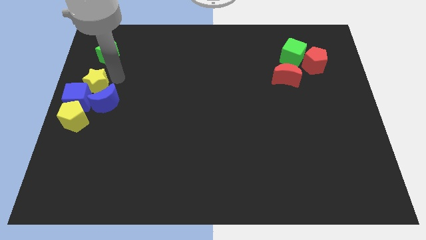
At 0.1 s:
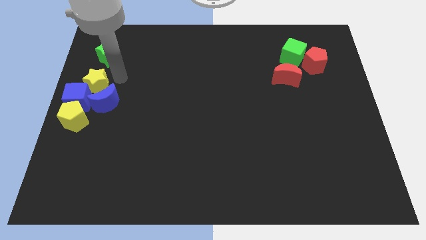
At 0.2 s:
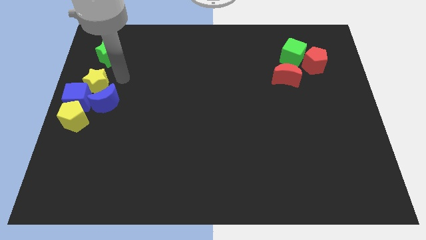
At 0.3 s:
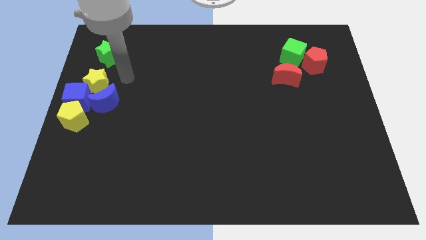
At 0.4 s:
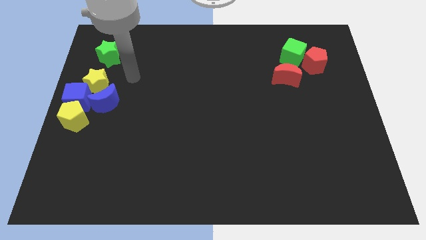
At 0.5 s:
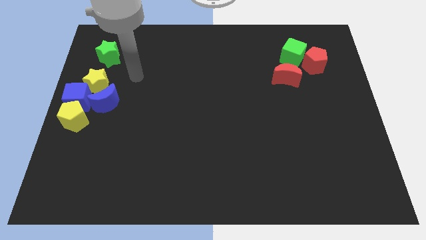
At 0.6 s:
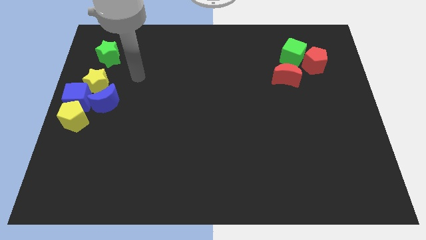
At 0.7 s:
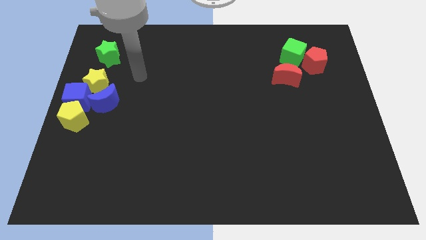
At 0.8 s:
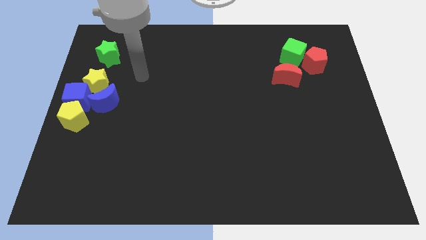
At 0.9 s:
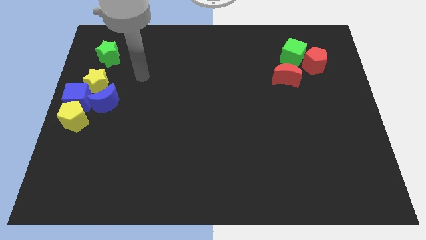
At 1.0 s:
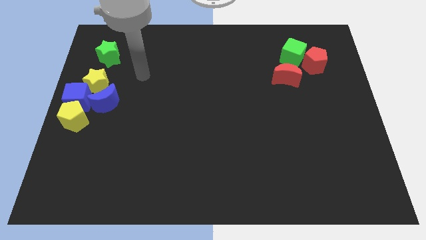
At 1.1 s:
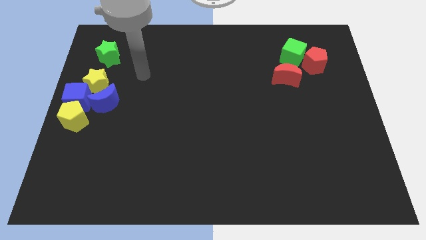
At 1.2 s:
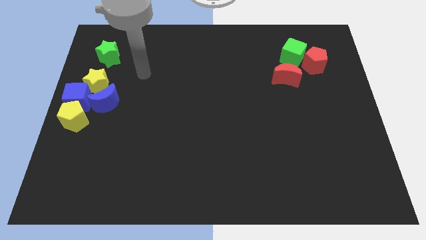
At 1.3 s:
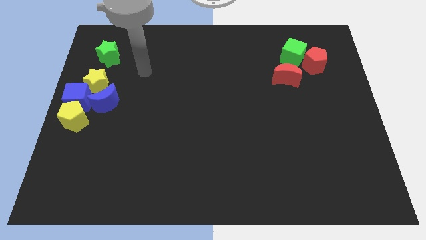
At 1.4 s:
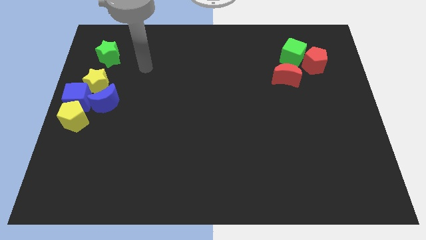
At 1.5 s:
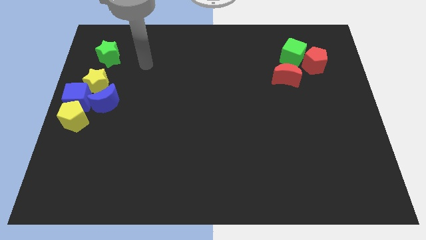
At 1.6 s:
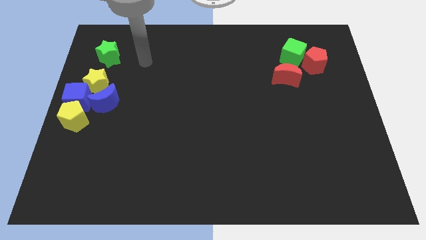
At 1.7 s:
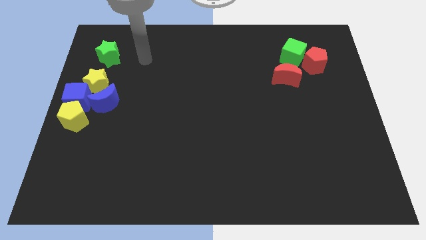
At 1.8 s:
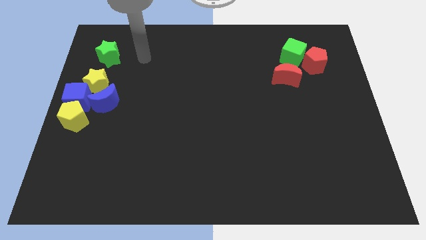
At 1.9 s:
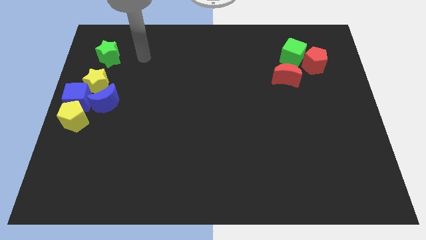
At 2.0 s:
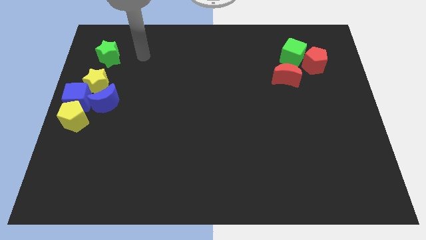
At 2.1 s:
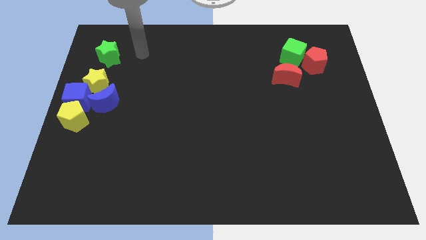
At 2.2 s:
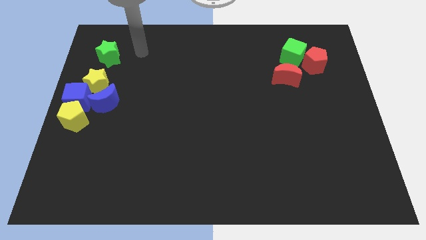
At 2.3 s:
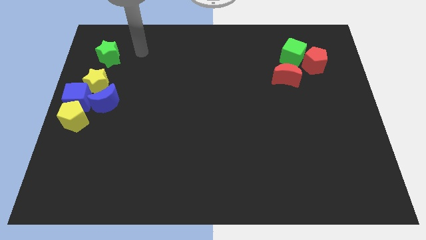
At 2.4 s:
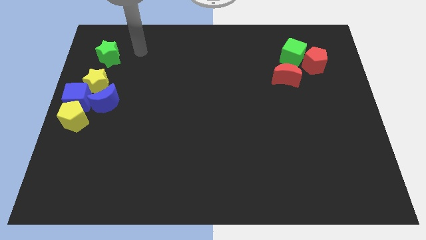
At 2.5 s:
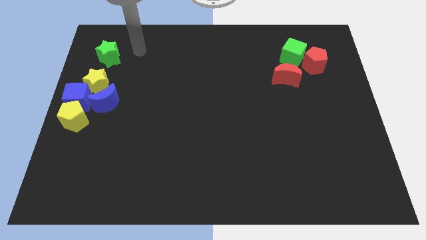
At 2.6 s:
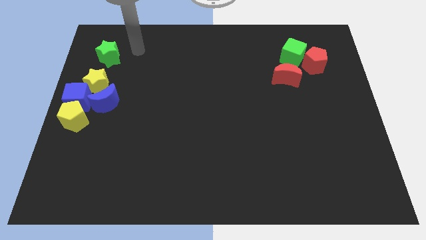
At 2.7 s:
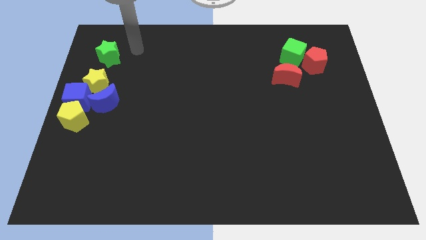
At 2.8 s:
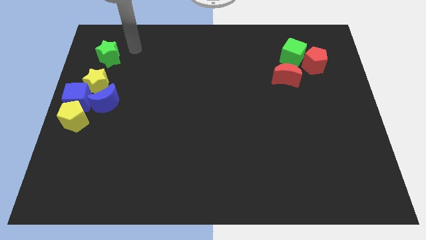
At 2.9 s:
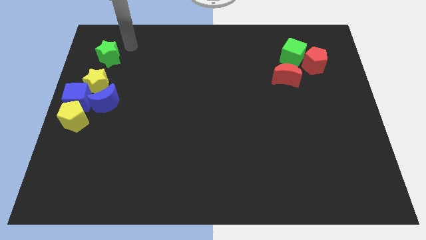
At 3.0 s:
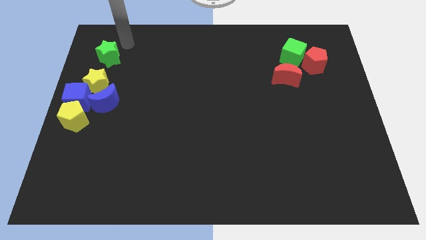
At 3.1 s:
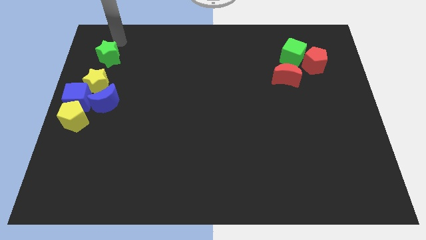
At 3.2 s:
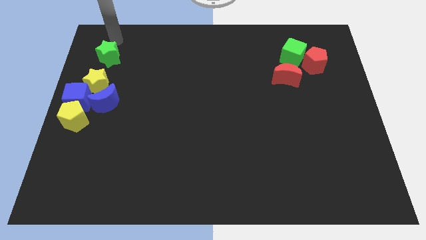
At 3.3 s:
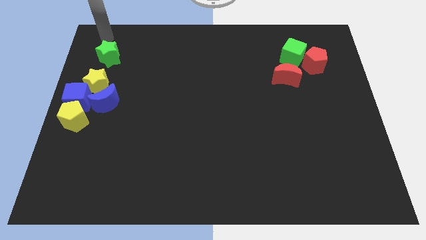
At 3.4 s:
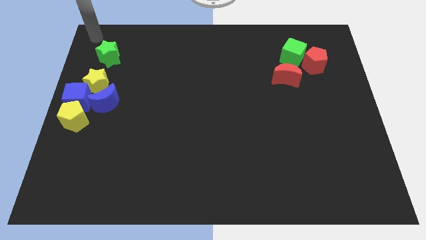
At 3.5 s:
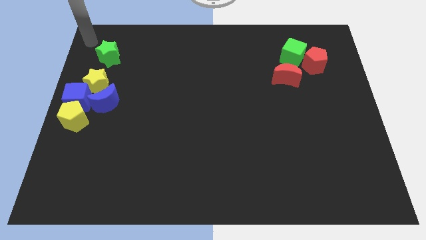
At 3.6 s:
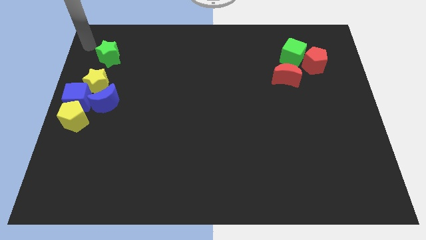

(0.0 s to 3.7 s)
point your arm at the top left side of green star

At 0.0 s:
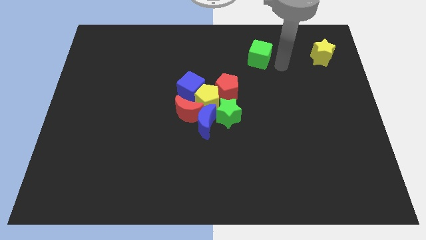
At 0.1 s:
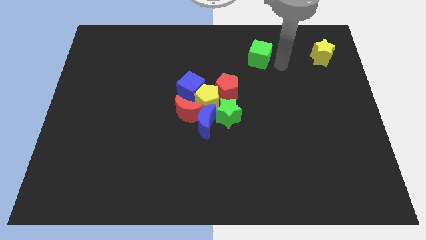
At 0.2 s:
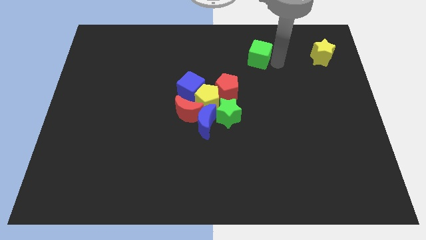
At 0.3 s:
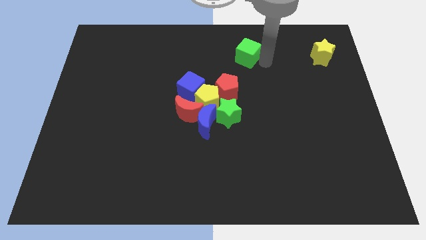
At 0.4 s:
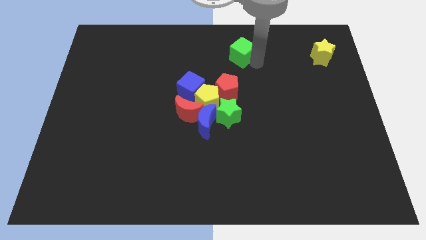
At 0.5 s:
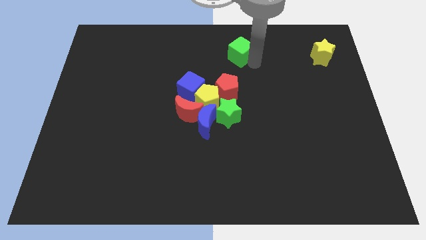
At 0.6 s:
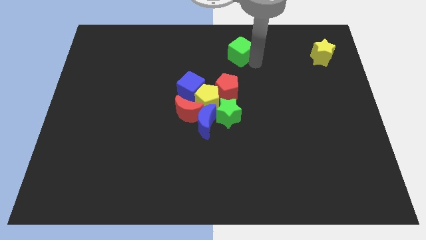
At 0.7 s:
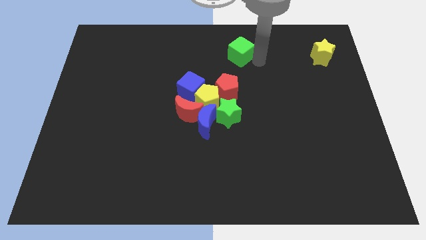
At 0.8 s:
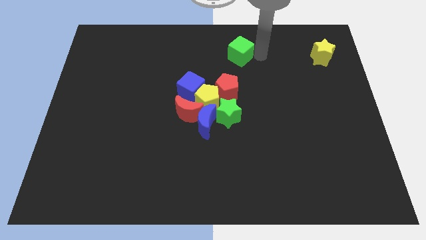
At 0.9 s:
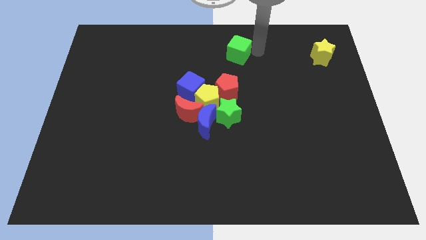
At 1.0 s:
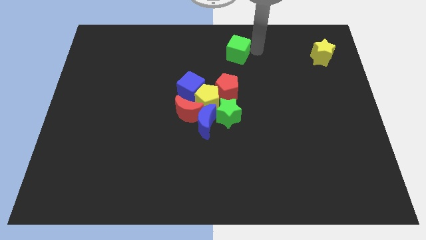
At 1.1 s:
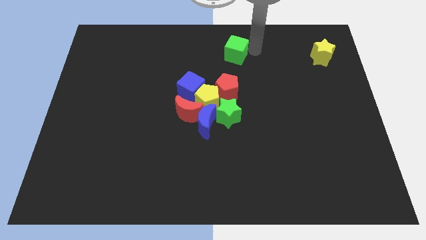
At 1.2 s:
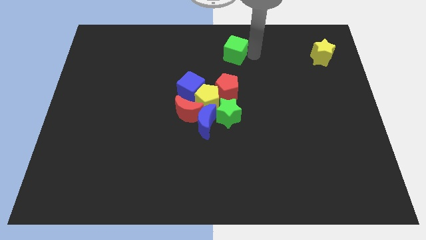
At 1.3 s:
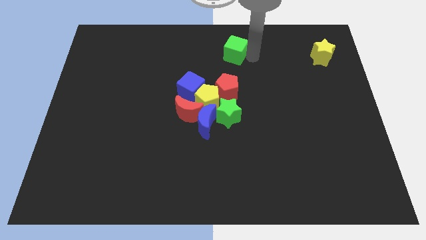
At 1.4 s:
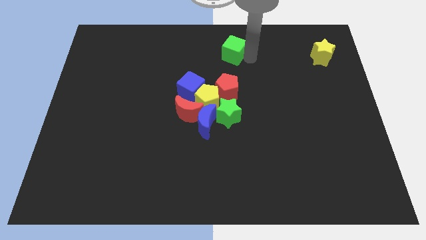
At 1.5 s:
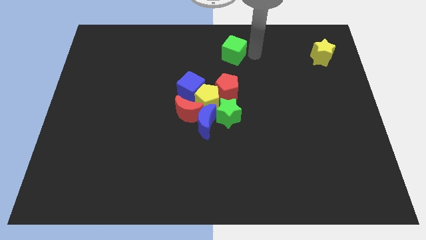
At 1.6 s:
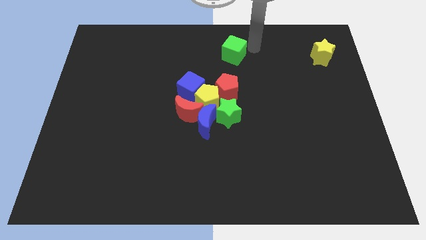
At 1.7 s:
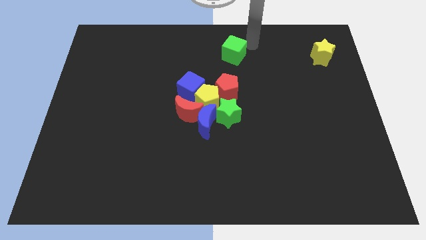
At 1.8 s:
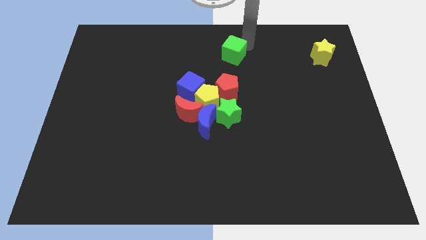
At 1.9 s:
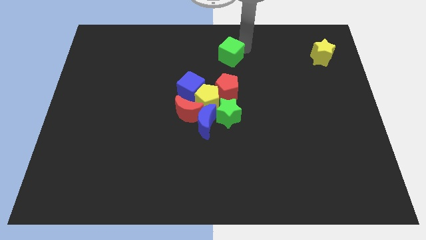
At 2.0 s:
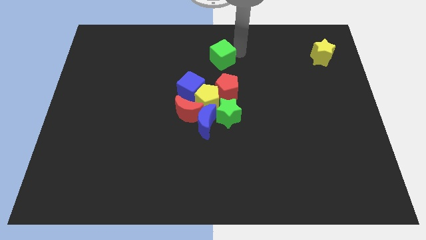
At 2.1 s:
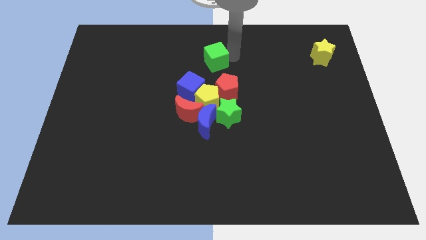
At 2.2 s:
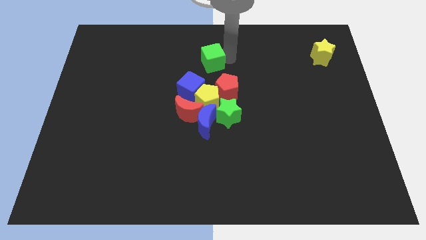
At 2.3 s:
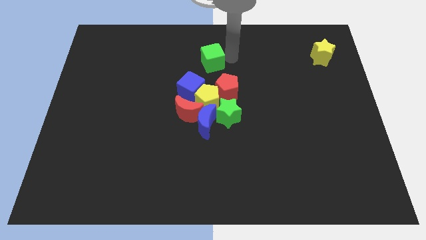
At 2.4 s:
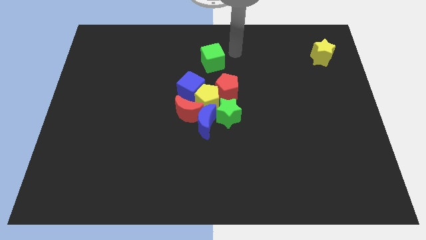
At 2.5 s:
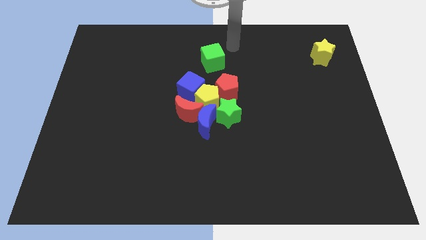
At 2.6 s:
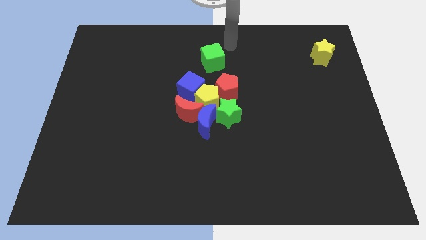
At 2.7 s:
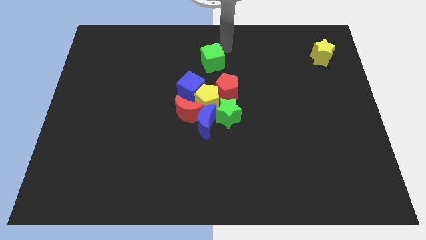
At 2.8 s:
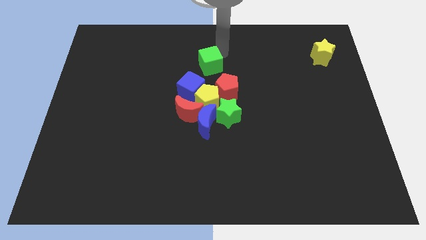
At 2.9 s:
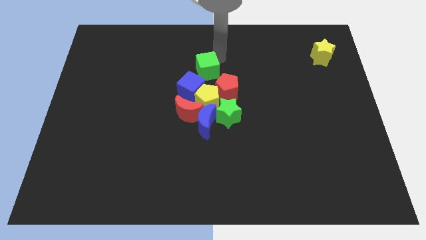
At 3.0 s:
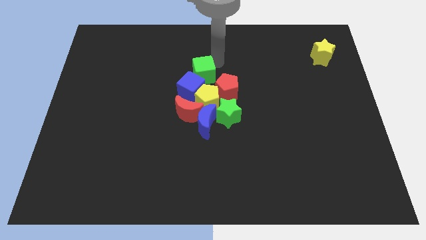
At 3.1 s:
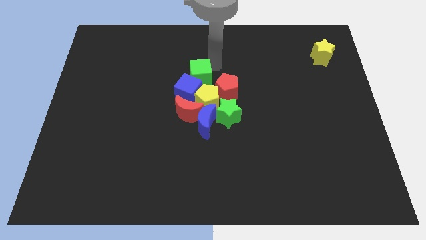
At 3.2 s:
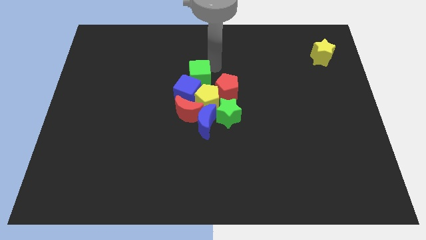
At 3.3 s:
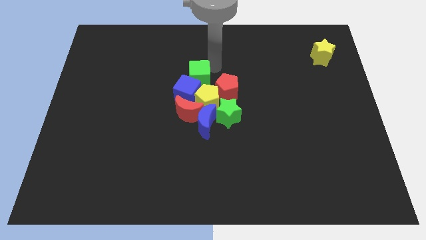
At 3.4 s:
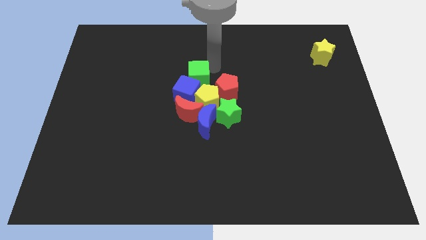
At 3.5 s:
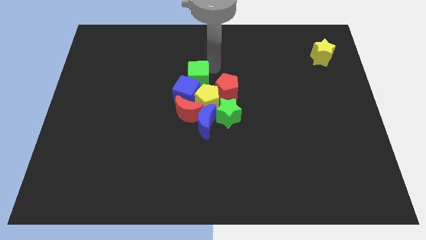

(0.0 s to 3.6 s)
push the green cube into a group of blocks

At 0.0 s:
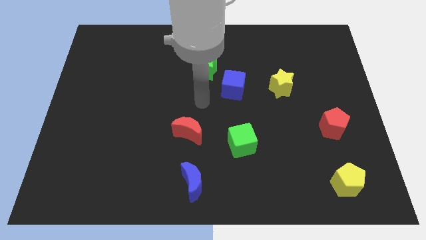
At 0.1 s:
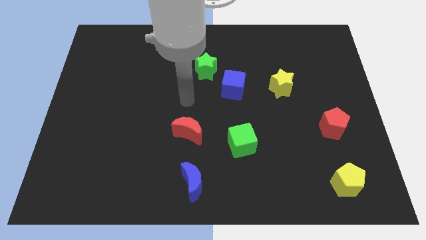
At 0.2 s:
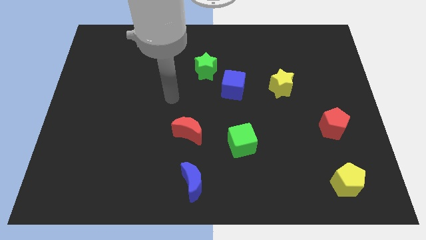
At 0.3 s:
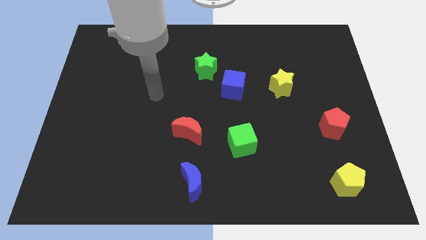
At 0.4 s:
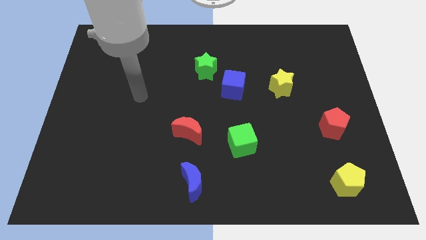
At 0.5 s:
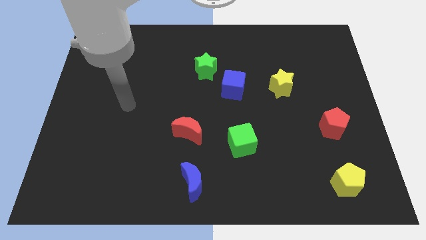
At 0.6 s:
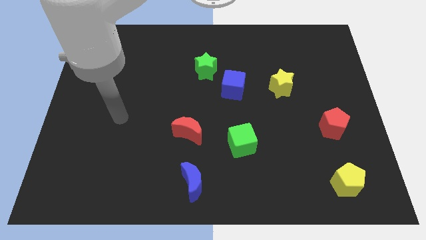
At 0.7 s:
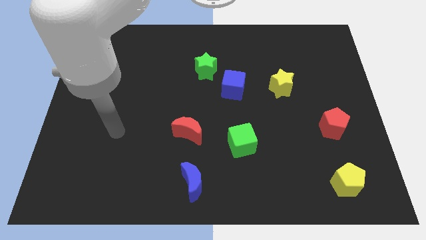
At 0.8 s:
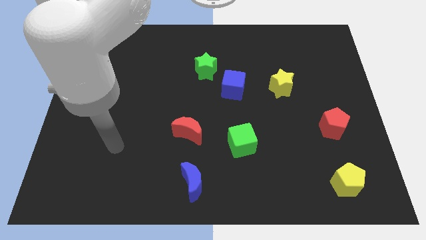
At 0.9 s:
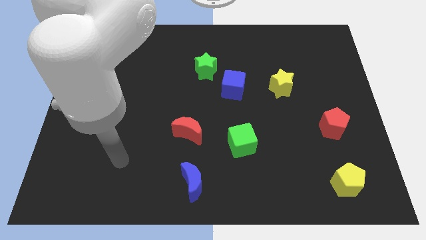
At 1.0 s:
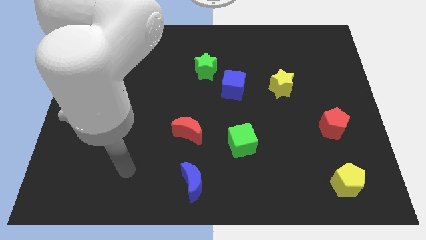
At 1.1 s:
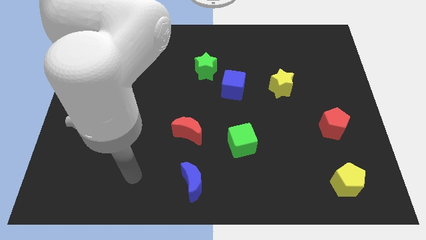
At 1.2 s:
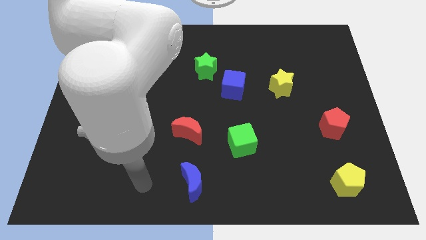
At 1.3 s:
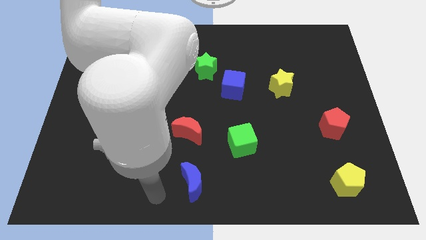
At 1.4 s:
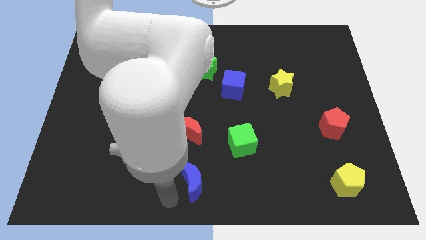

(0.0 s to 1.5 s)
move the arm left beside the blue moon
